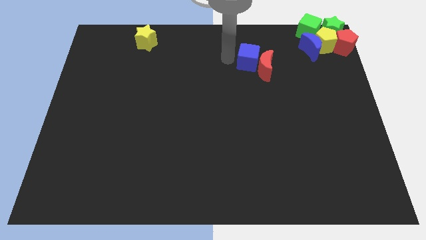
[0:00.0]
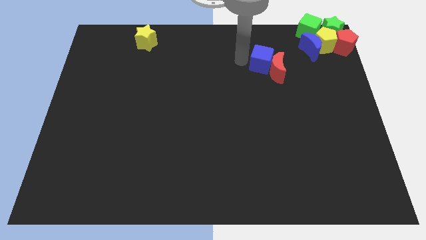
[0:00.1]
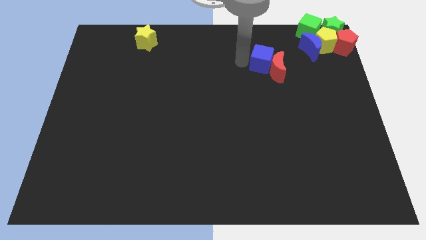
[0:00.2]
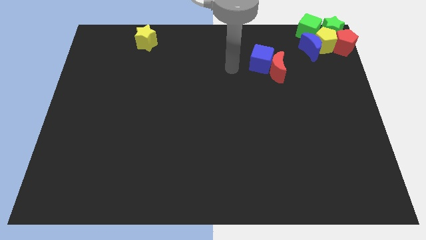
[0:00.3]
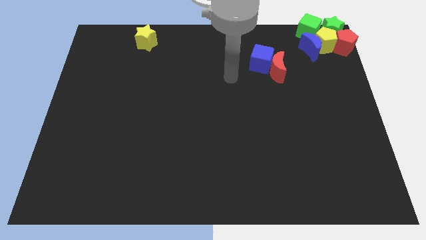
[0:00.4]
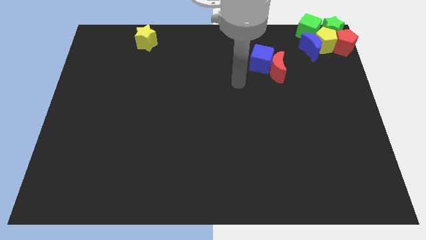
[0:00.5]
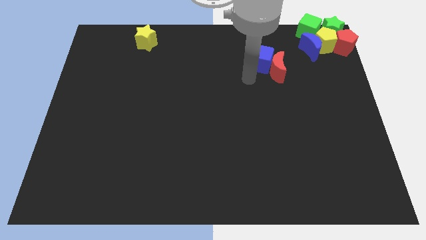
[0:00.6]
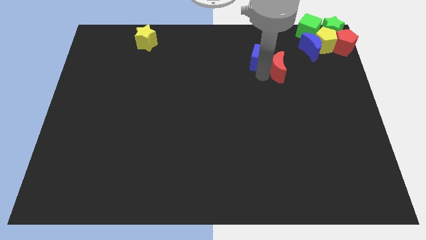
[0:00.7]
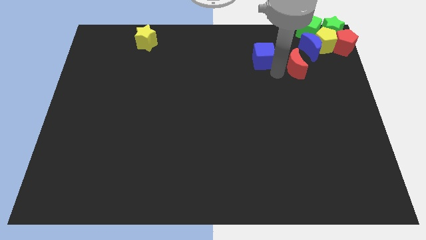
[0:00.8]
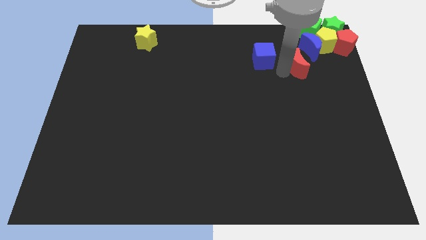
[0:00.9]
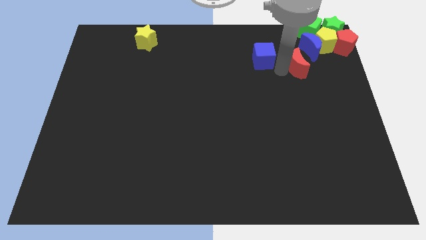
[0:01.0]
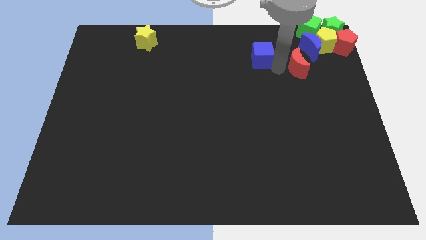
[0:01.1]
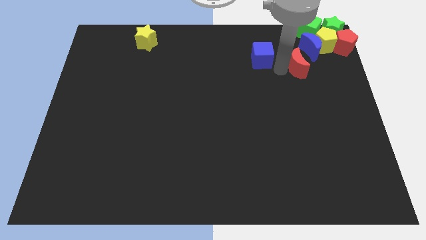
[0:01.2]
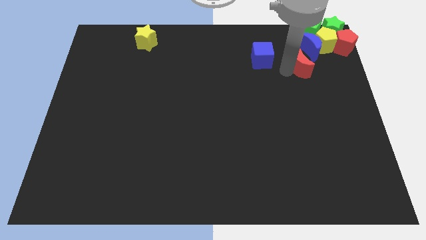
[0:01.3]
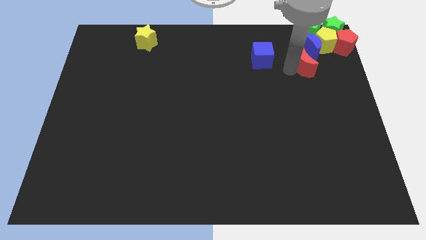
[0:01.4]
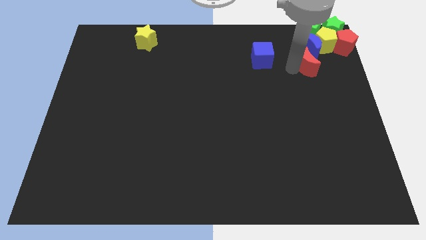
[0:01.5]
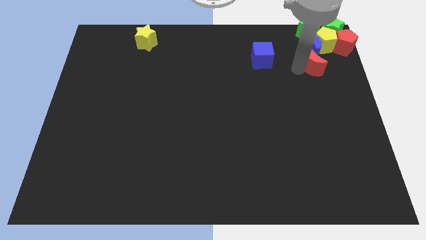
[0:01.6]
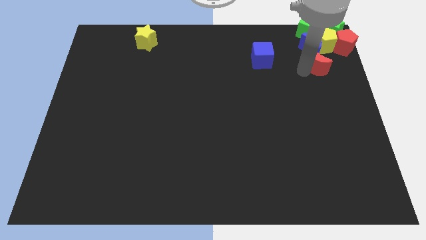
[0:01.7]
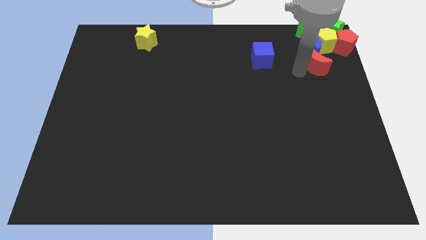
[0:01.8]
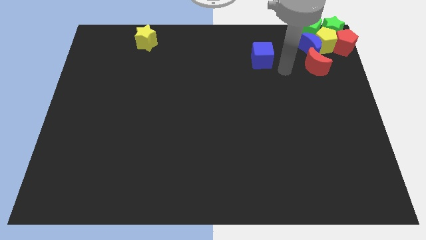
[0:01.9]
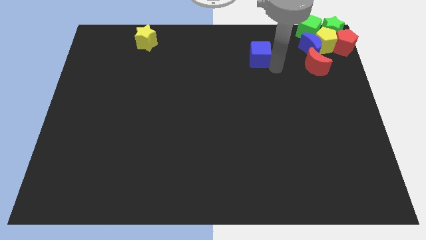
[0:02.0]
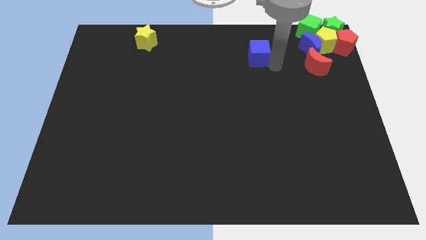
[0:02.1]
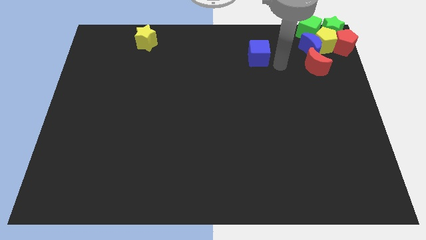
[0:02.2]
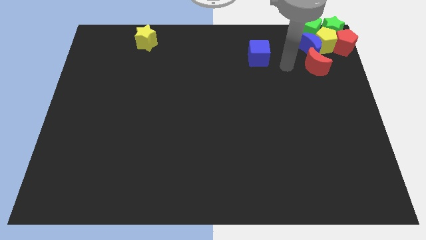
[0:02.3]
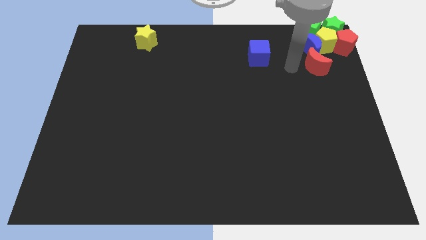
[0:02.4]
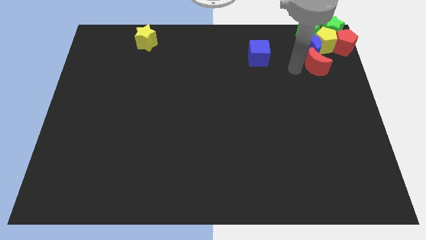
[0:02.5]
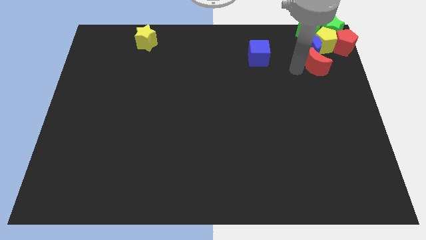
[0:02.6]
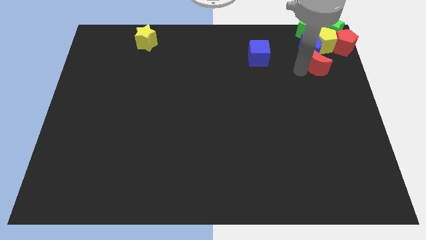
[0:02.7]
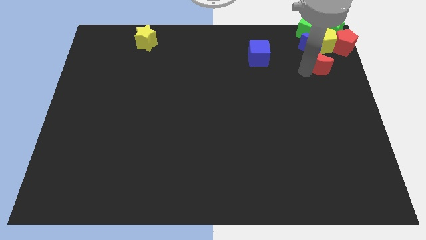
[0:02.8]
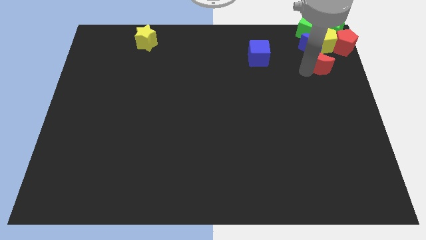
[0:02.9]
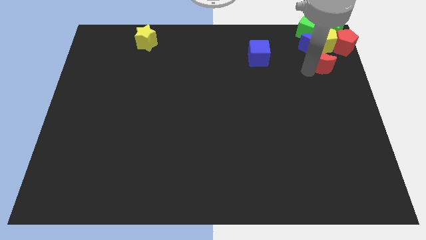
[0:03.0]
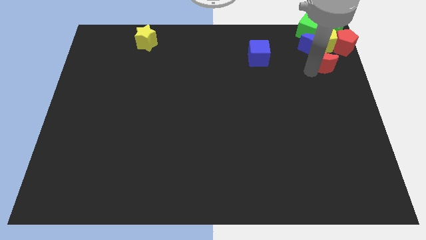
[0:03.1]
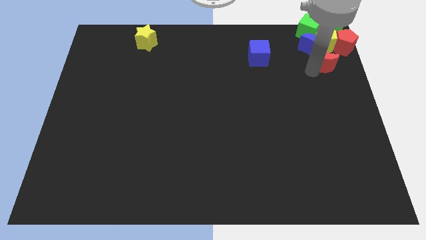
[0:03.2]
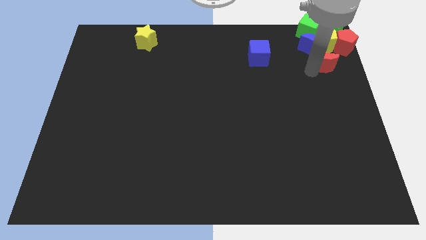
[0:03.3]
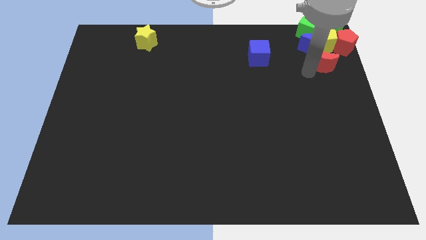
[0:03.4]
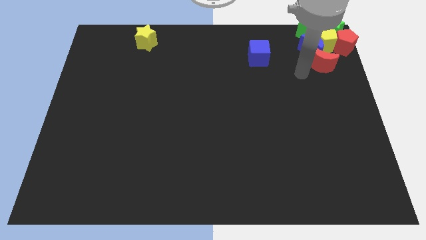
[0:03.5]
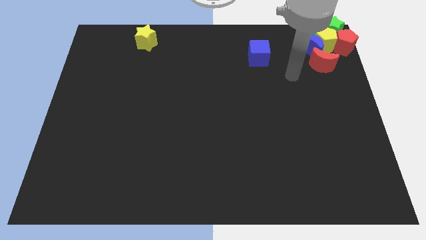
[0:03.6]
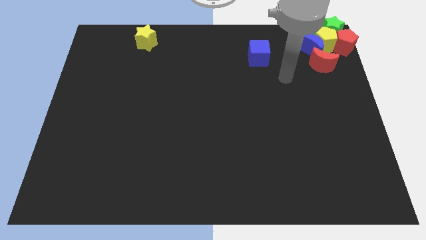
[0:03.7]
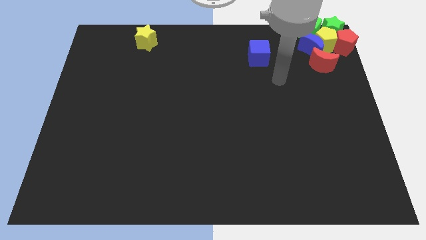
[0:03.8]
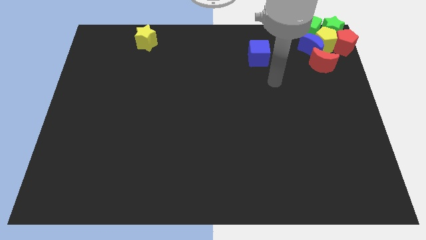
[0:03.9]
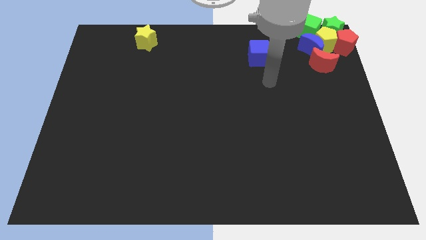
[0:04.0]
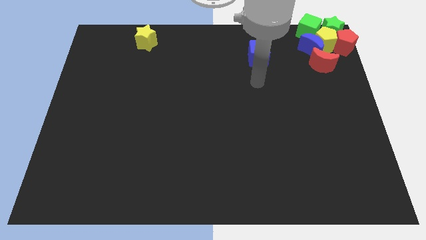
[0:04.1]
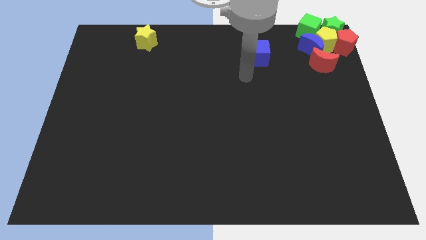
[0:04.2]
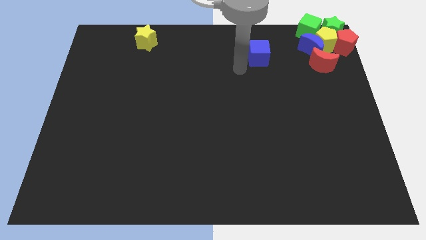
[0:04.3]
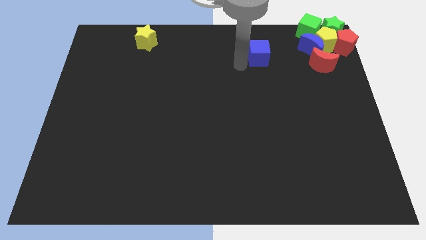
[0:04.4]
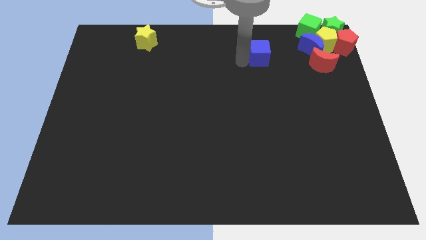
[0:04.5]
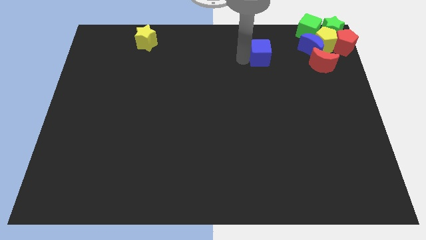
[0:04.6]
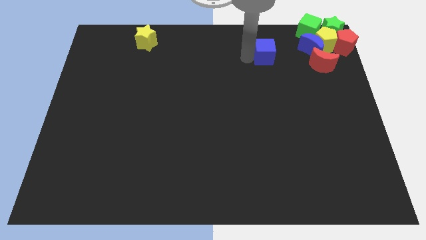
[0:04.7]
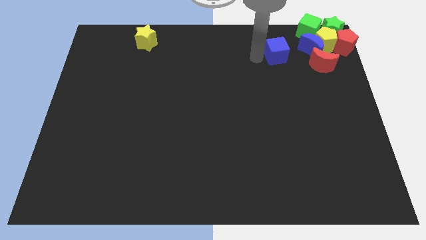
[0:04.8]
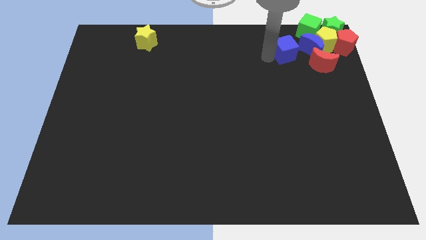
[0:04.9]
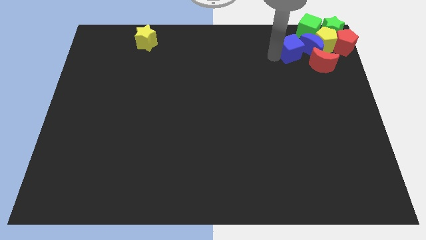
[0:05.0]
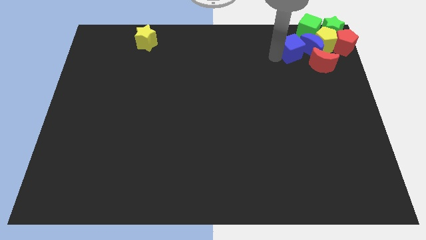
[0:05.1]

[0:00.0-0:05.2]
separate the red moon from the blue cube

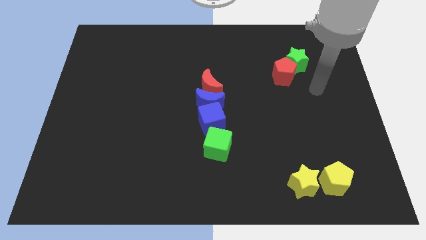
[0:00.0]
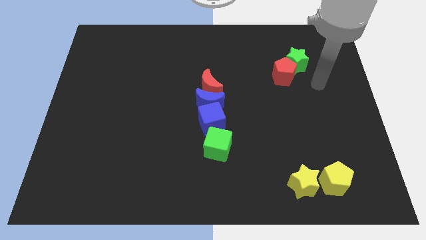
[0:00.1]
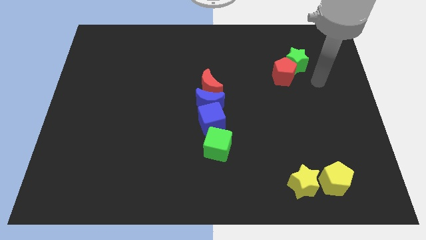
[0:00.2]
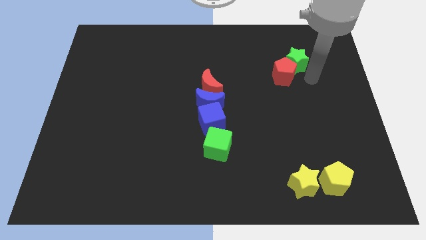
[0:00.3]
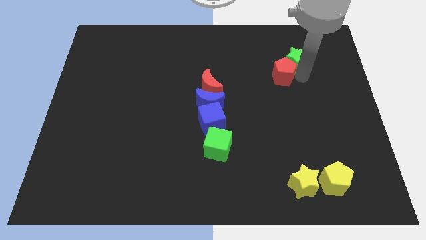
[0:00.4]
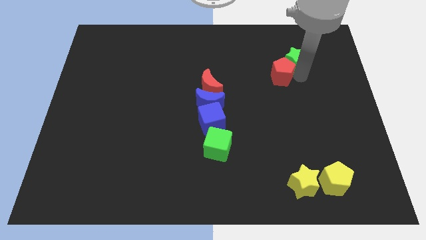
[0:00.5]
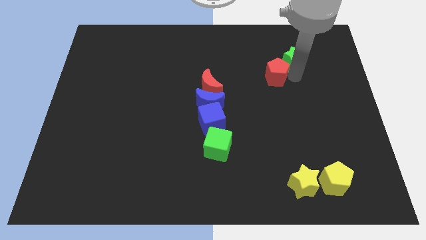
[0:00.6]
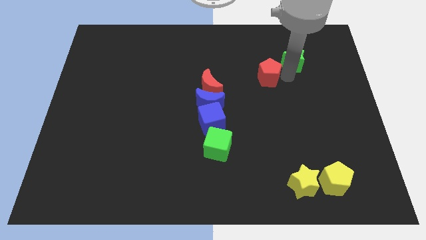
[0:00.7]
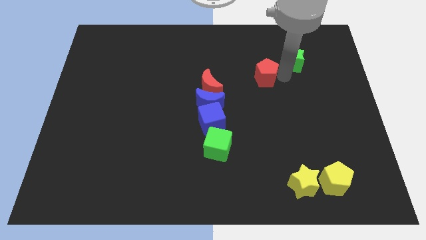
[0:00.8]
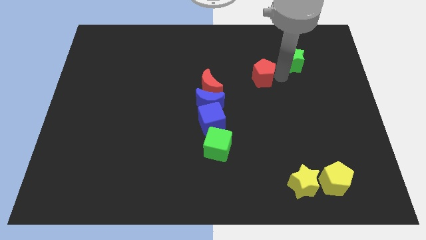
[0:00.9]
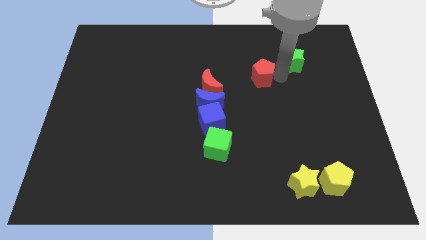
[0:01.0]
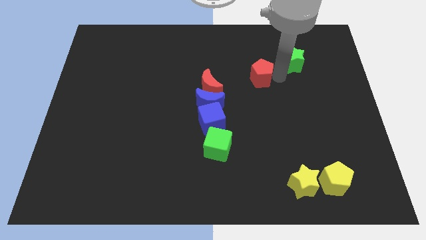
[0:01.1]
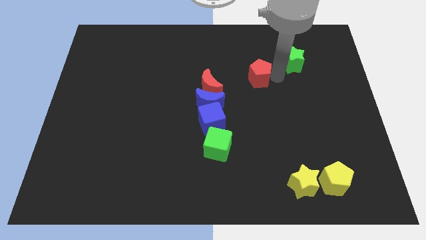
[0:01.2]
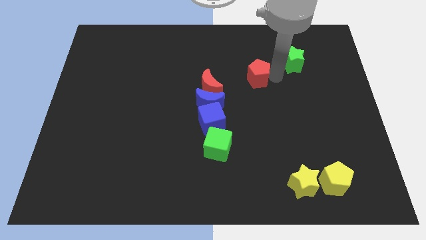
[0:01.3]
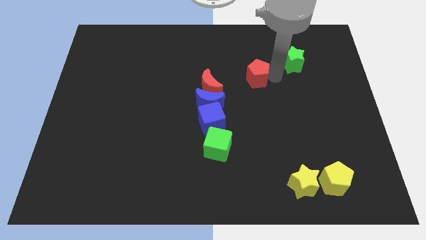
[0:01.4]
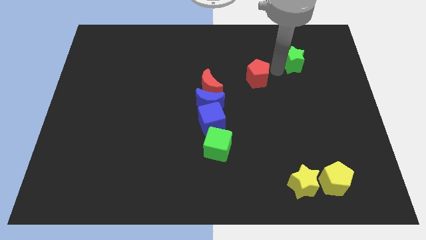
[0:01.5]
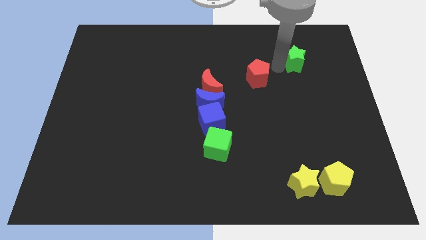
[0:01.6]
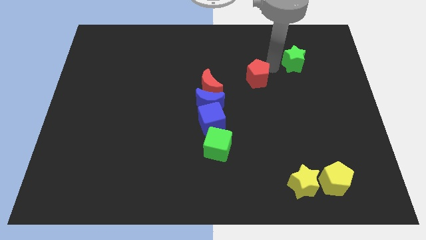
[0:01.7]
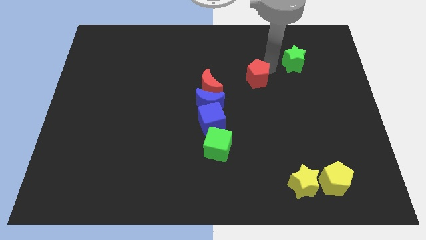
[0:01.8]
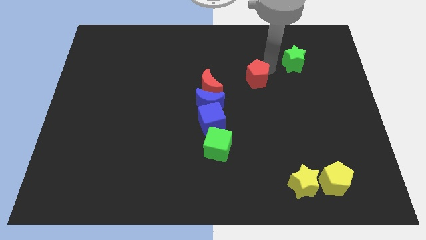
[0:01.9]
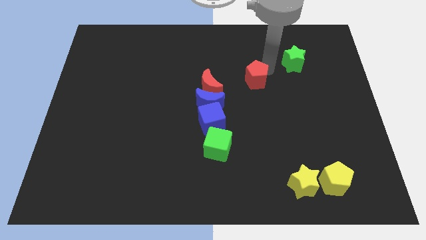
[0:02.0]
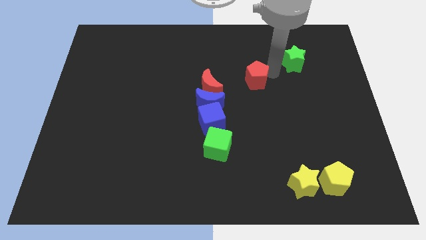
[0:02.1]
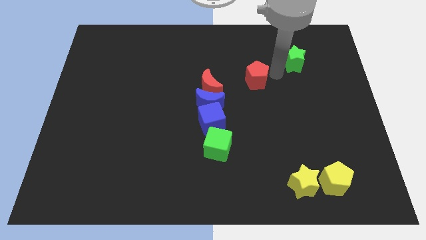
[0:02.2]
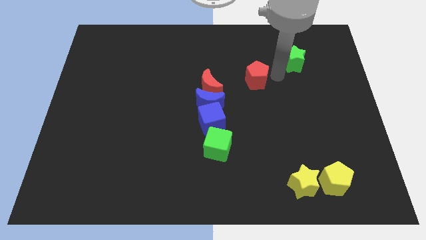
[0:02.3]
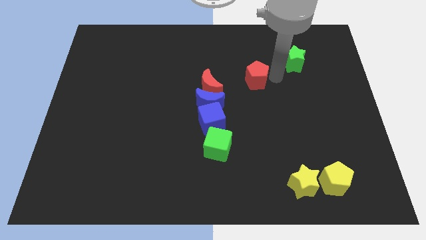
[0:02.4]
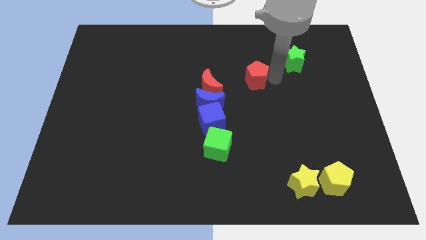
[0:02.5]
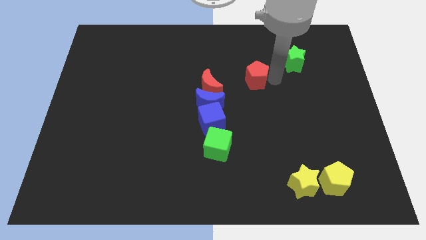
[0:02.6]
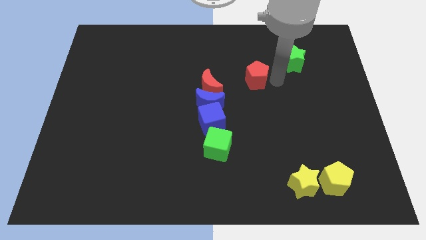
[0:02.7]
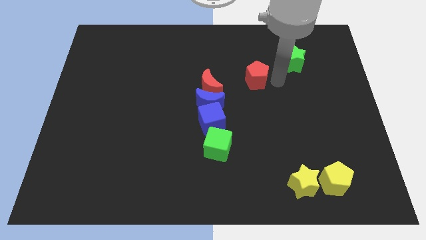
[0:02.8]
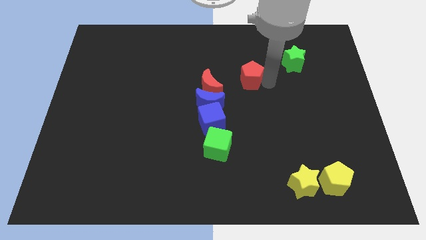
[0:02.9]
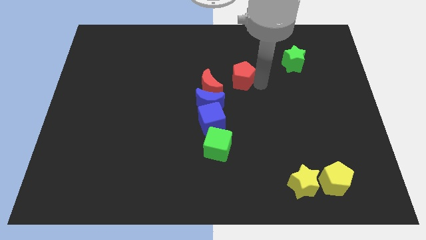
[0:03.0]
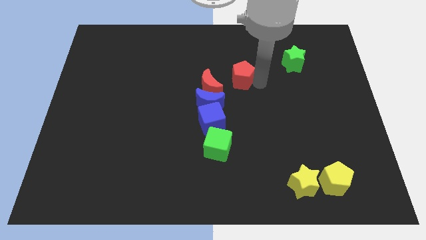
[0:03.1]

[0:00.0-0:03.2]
move the red pentagon between the green star and red crescent

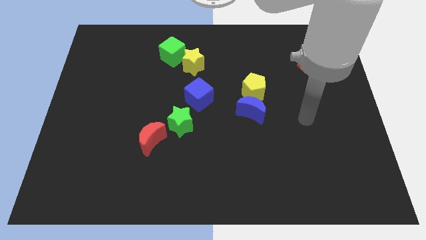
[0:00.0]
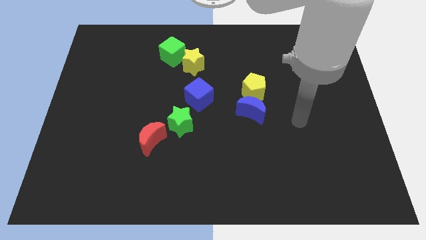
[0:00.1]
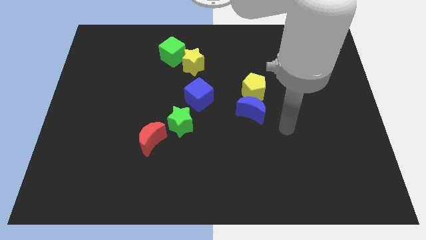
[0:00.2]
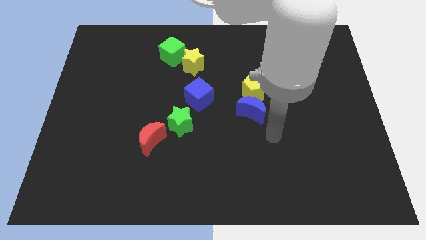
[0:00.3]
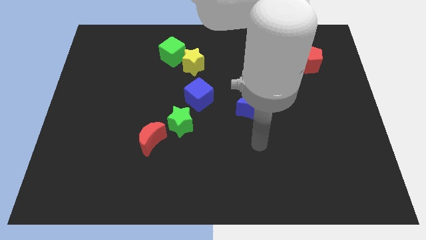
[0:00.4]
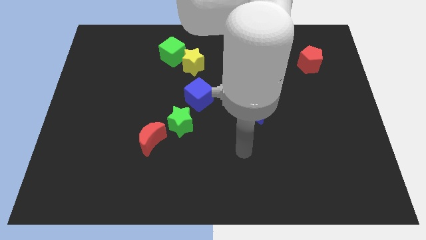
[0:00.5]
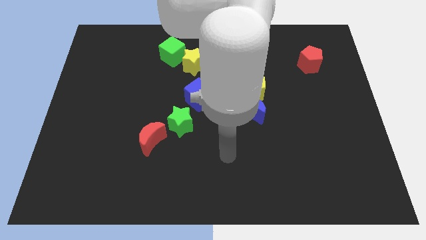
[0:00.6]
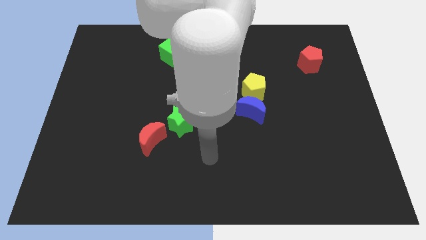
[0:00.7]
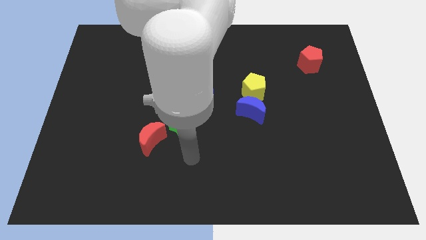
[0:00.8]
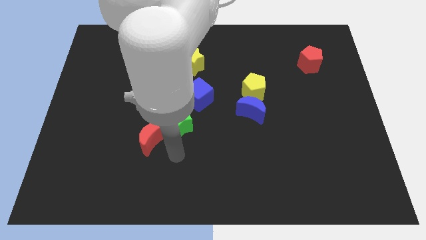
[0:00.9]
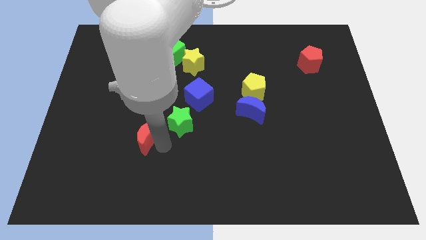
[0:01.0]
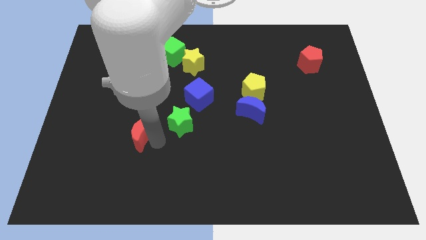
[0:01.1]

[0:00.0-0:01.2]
move your arm towards red crescent
